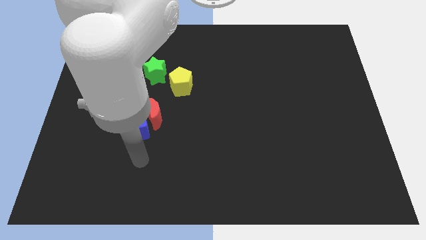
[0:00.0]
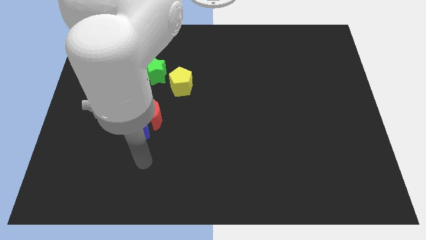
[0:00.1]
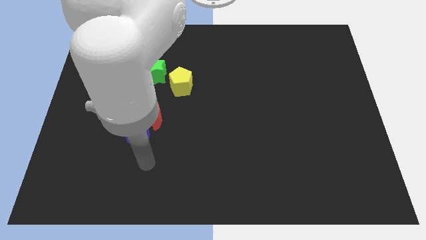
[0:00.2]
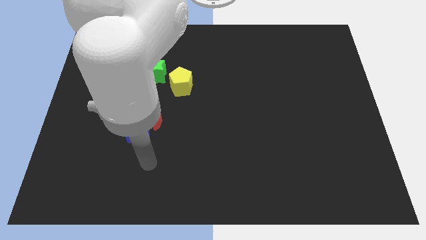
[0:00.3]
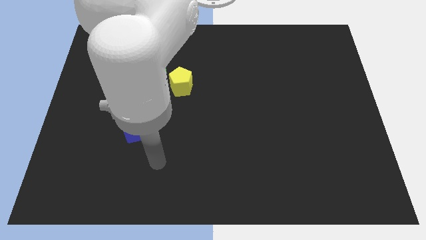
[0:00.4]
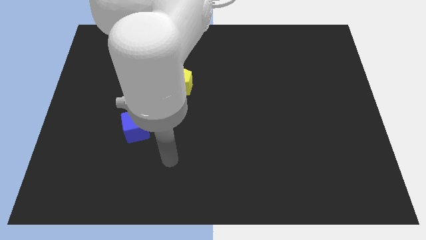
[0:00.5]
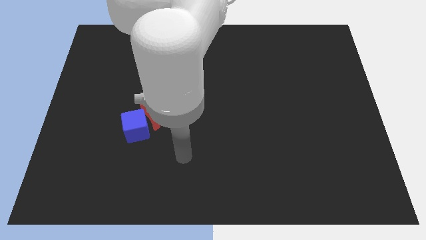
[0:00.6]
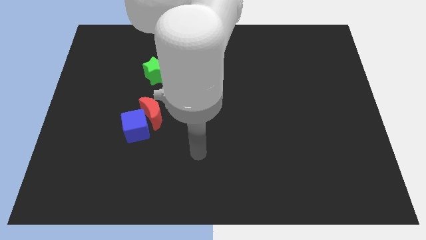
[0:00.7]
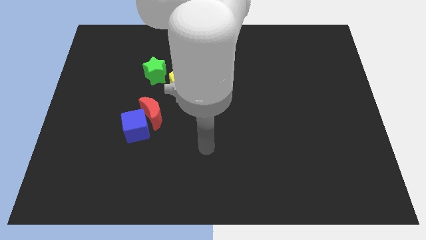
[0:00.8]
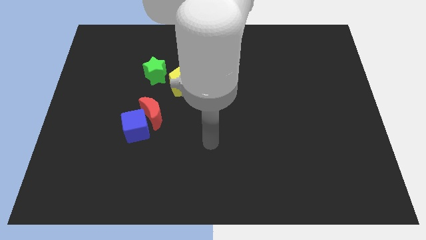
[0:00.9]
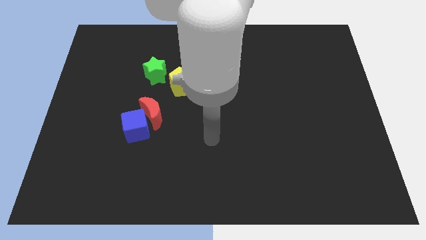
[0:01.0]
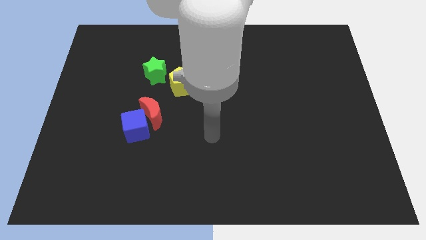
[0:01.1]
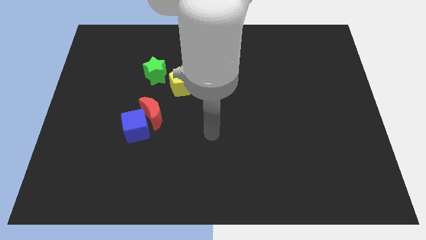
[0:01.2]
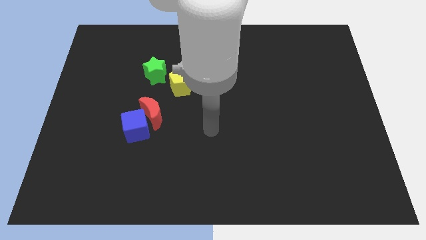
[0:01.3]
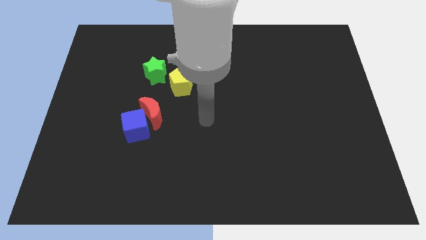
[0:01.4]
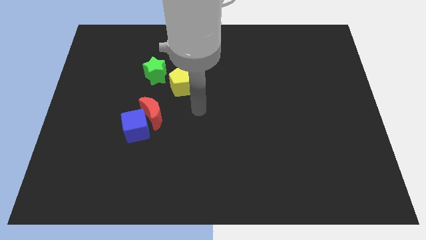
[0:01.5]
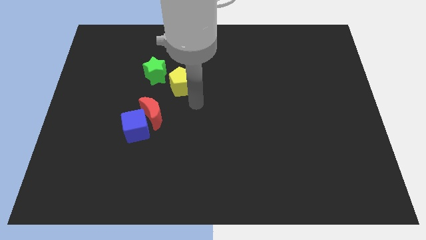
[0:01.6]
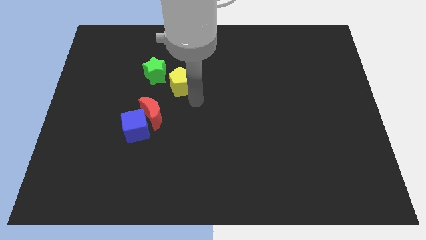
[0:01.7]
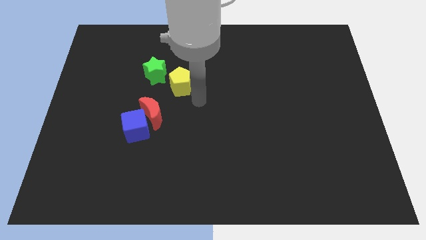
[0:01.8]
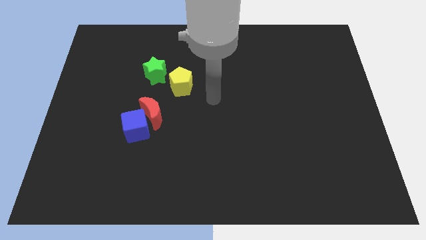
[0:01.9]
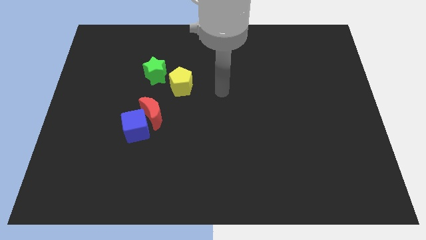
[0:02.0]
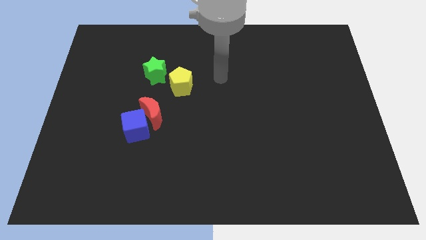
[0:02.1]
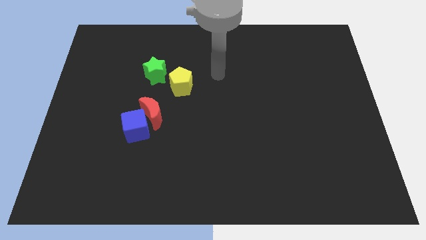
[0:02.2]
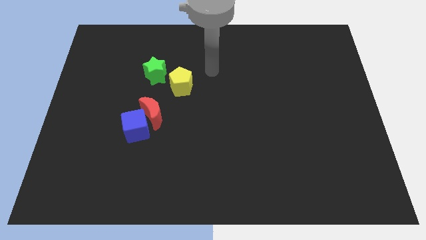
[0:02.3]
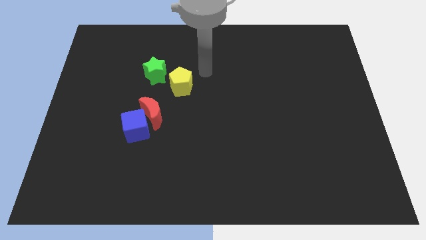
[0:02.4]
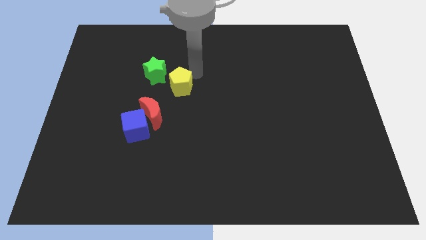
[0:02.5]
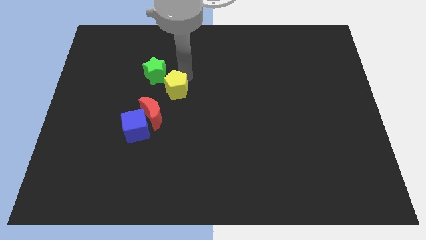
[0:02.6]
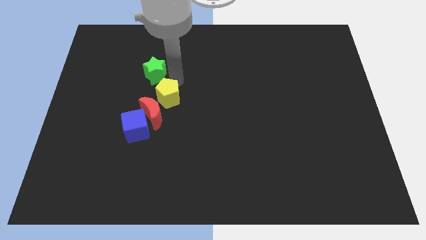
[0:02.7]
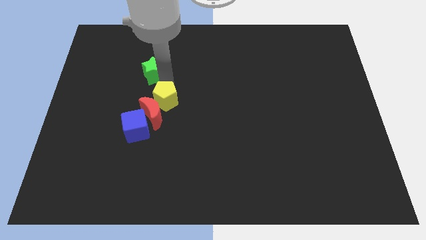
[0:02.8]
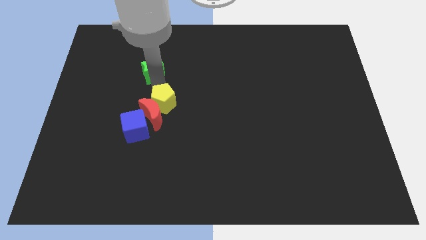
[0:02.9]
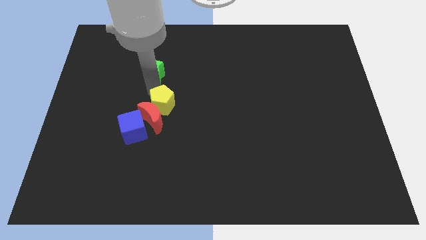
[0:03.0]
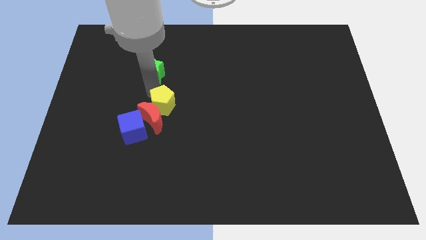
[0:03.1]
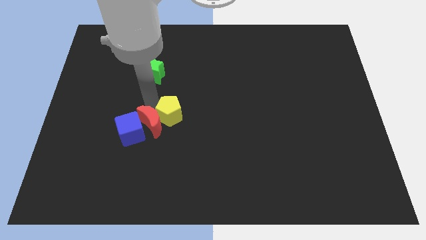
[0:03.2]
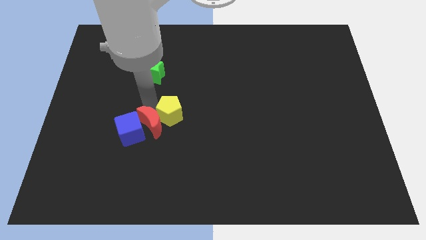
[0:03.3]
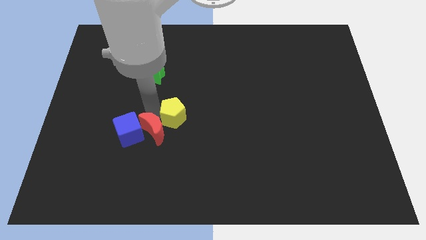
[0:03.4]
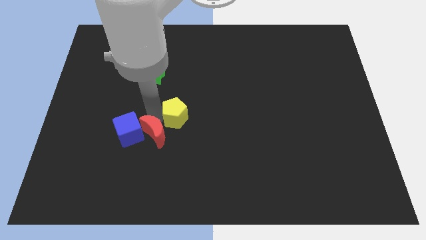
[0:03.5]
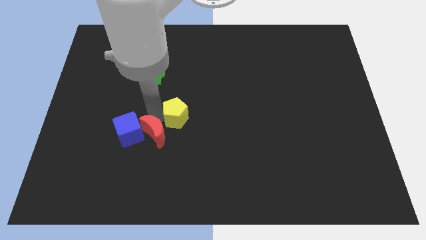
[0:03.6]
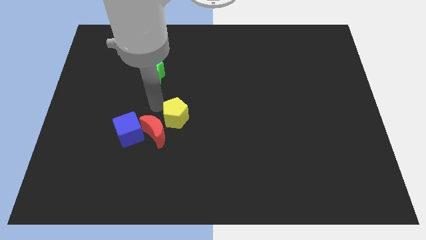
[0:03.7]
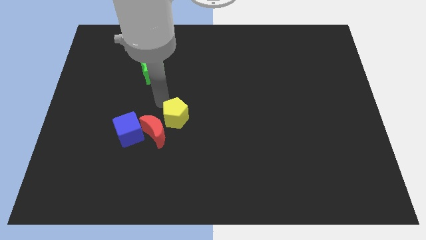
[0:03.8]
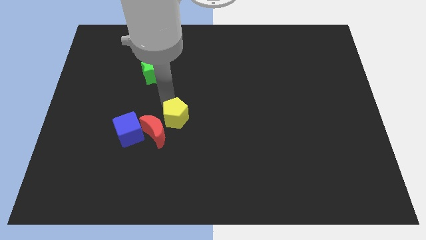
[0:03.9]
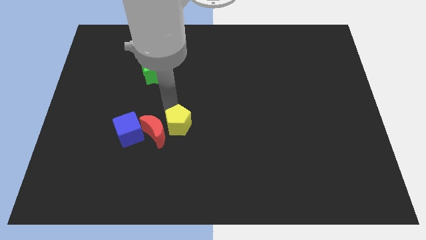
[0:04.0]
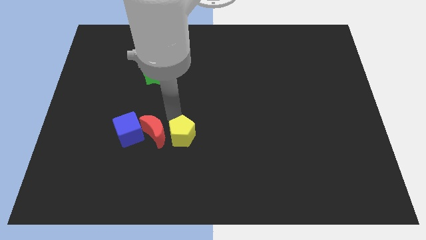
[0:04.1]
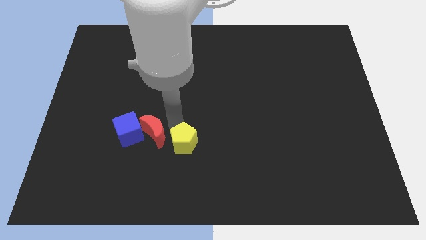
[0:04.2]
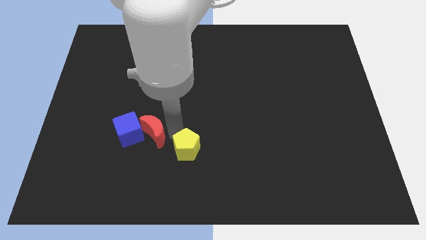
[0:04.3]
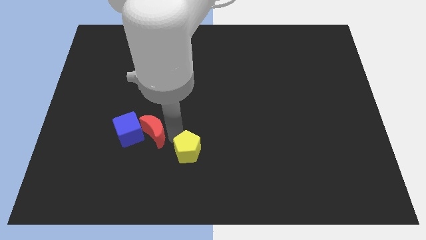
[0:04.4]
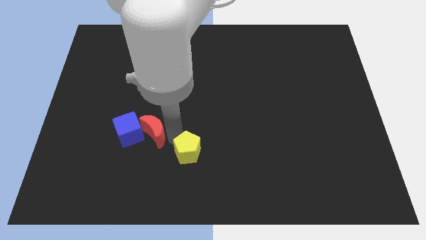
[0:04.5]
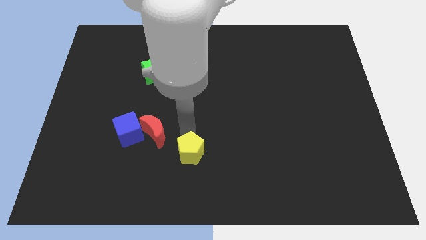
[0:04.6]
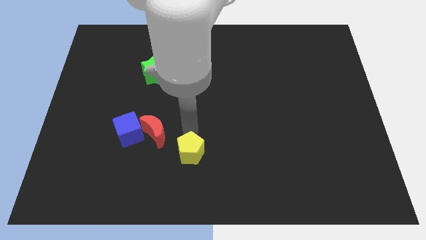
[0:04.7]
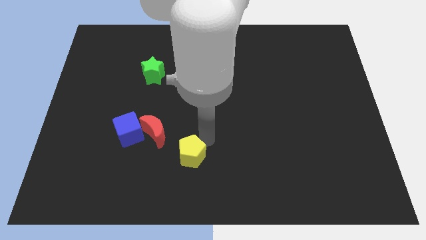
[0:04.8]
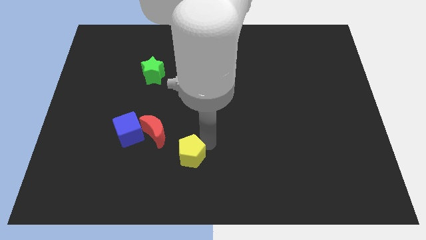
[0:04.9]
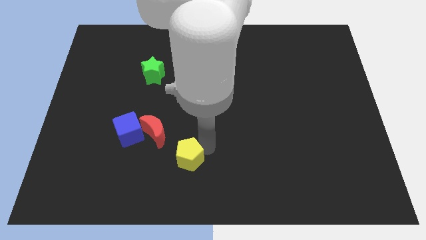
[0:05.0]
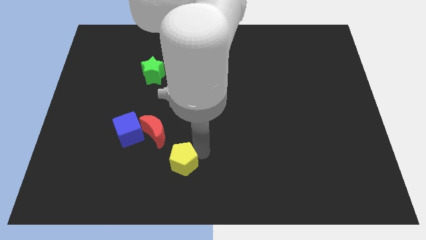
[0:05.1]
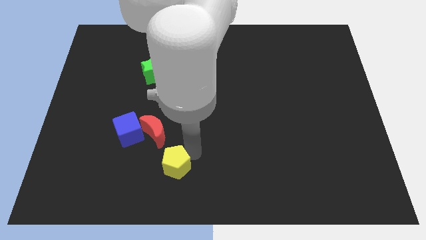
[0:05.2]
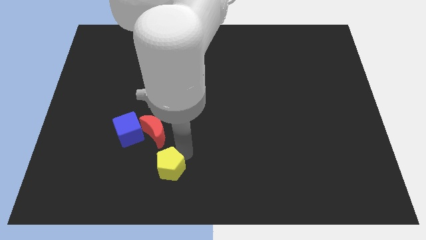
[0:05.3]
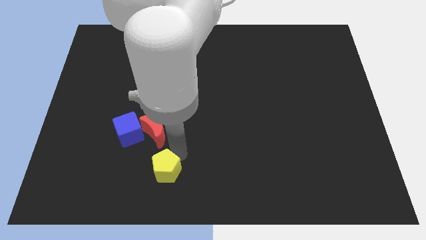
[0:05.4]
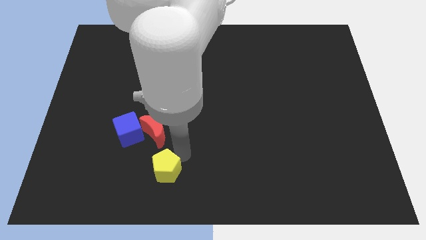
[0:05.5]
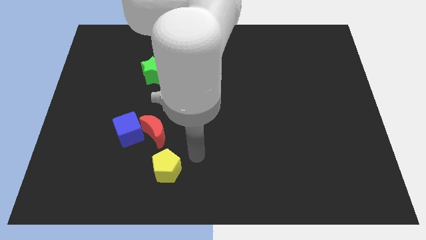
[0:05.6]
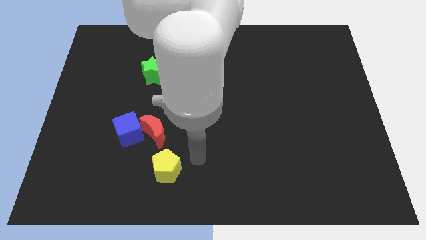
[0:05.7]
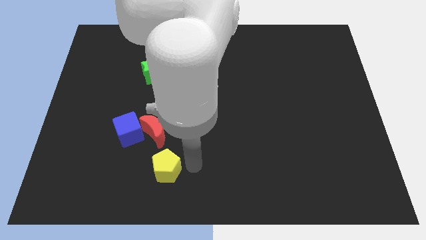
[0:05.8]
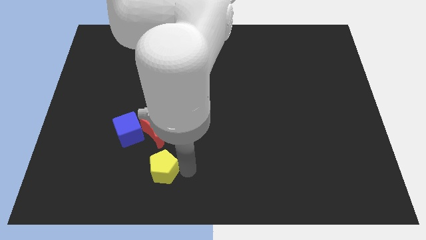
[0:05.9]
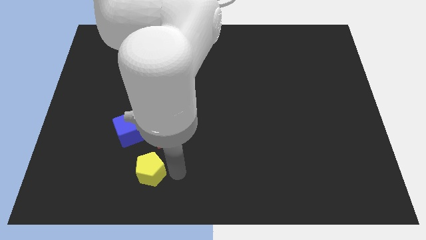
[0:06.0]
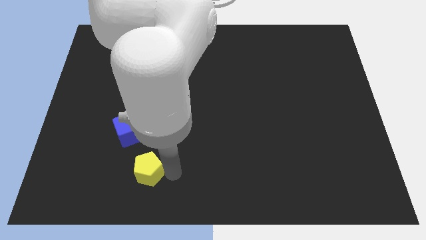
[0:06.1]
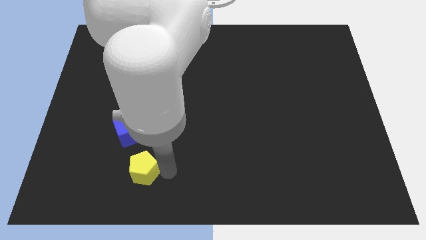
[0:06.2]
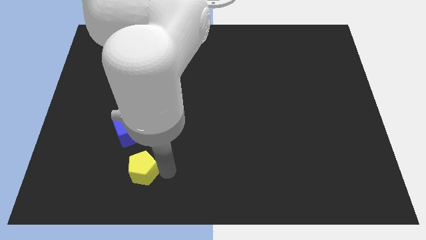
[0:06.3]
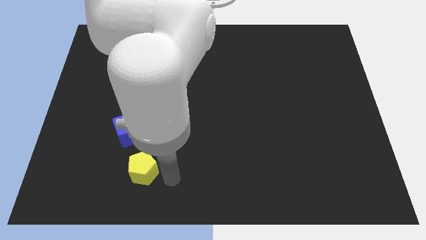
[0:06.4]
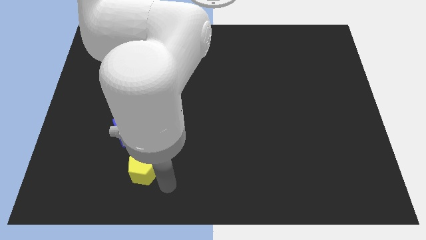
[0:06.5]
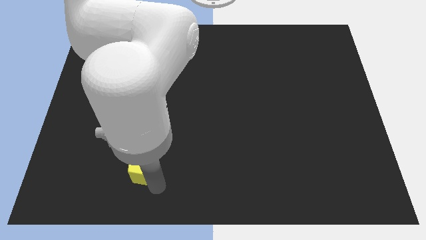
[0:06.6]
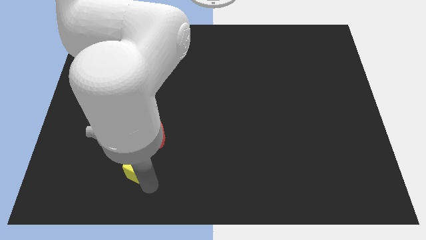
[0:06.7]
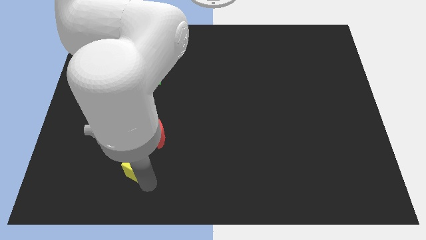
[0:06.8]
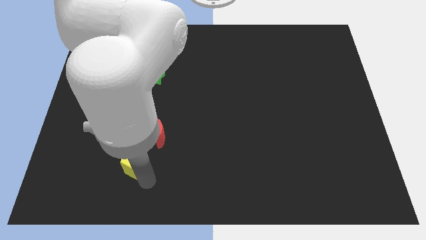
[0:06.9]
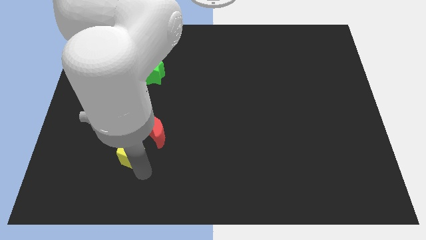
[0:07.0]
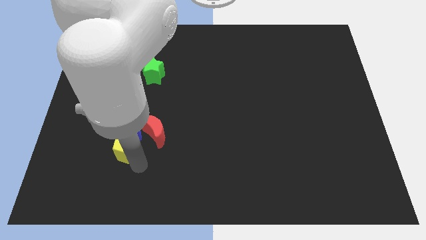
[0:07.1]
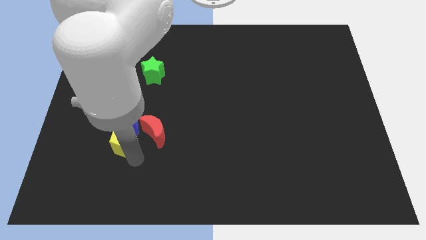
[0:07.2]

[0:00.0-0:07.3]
slide the pentagon close to the blue cube

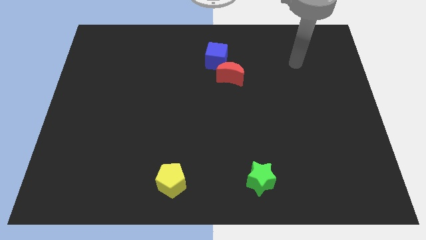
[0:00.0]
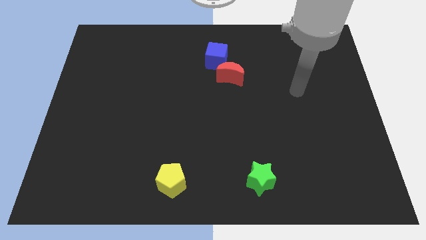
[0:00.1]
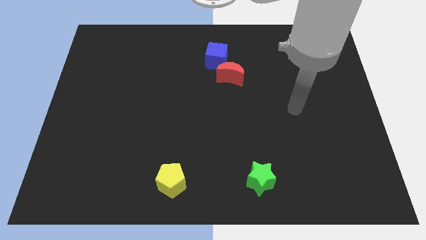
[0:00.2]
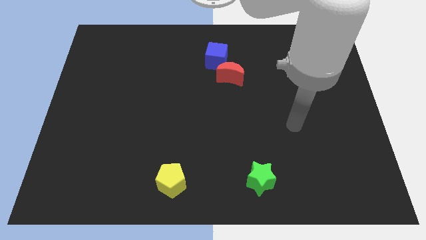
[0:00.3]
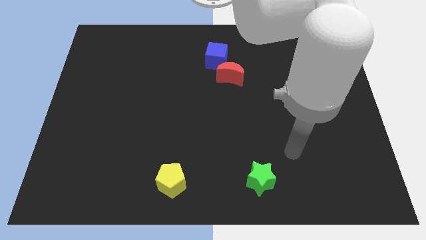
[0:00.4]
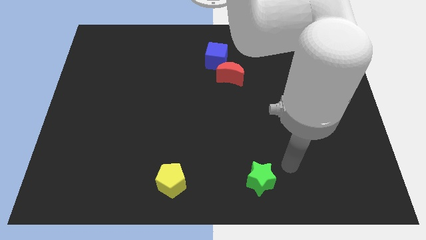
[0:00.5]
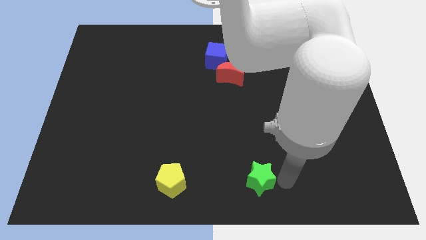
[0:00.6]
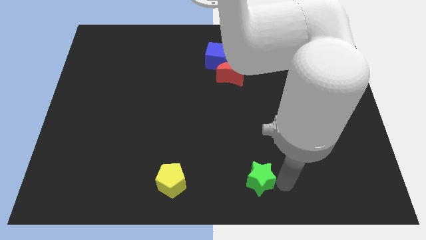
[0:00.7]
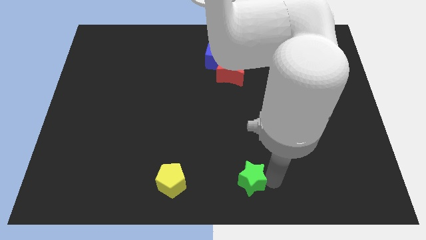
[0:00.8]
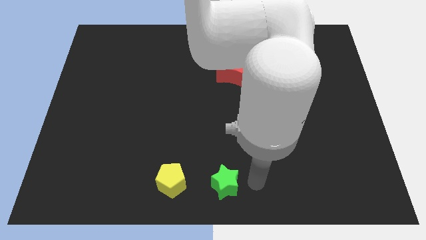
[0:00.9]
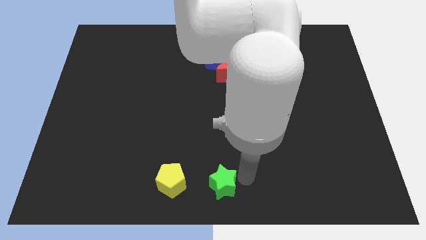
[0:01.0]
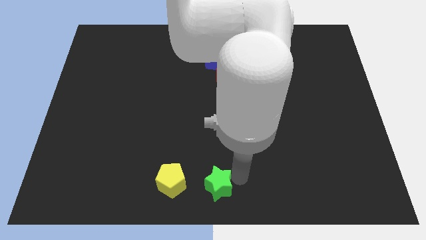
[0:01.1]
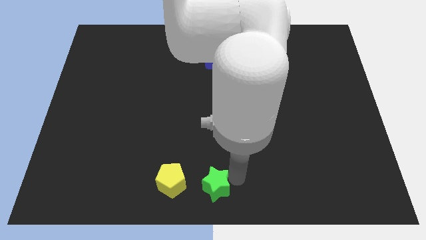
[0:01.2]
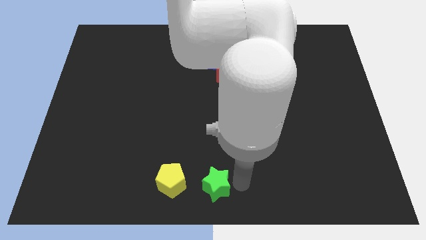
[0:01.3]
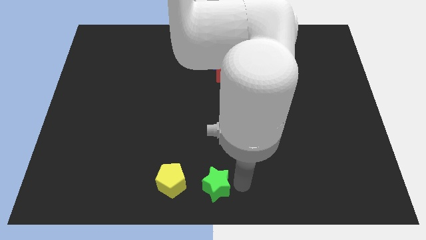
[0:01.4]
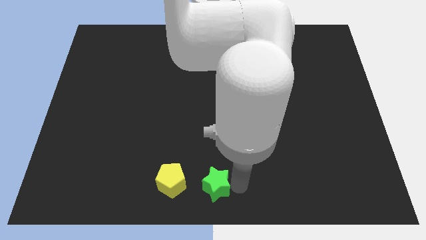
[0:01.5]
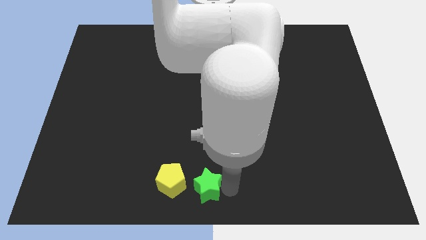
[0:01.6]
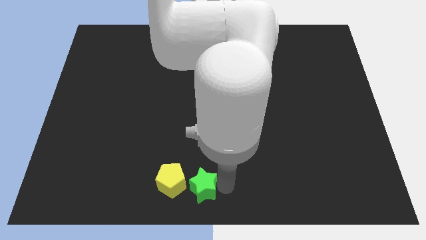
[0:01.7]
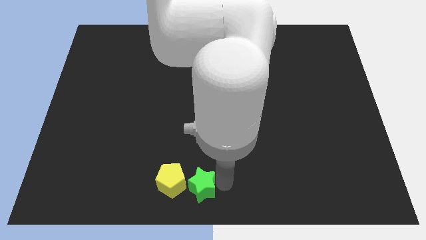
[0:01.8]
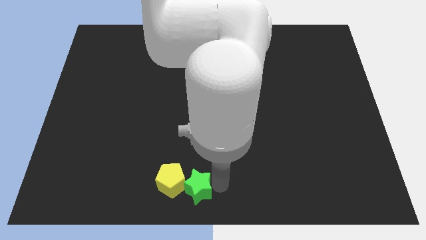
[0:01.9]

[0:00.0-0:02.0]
slide the green star close to the pentagon
